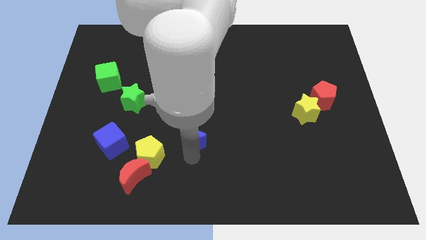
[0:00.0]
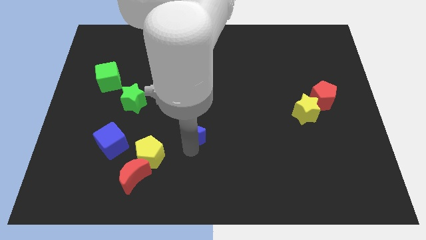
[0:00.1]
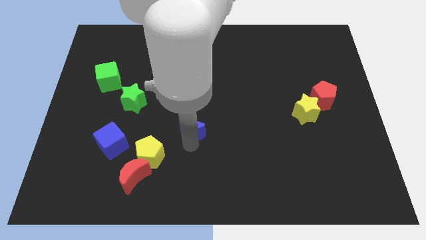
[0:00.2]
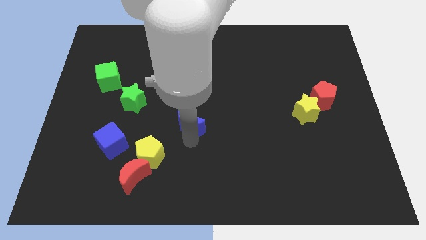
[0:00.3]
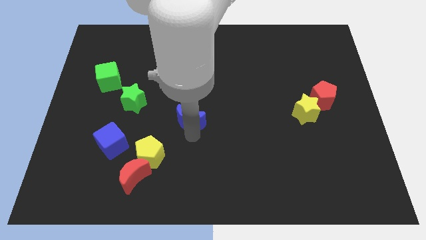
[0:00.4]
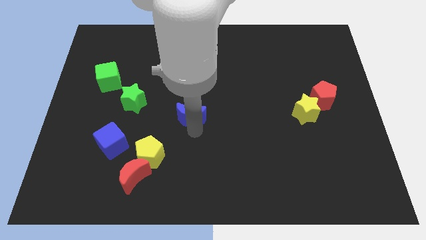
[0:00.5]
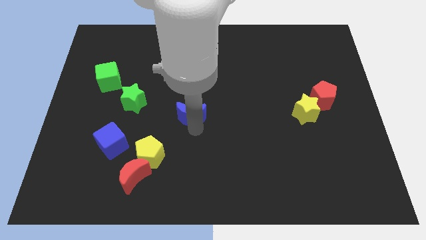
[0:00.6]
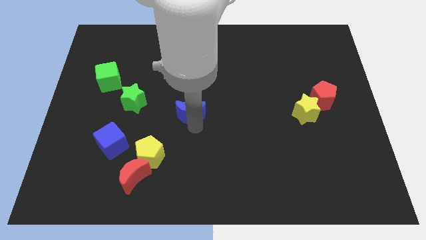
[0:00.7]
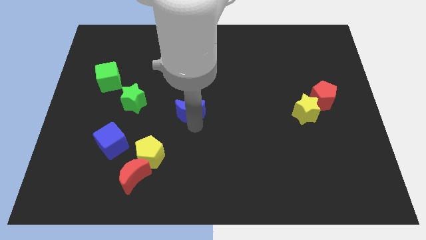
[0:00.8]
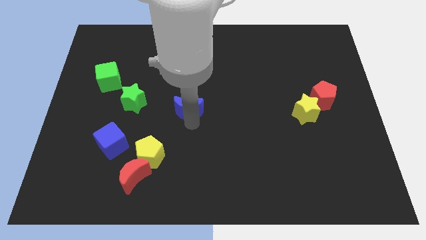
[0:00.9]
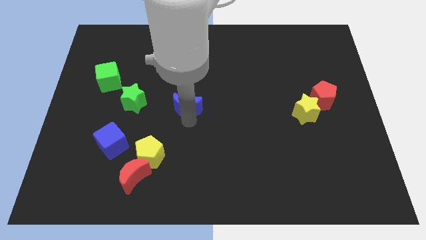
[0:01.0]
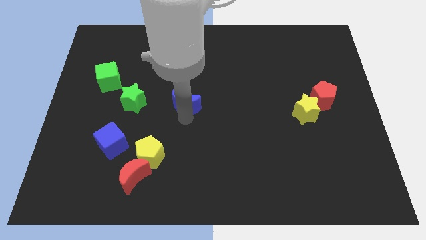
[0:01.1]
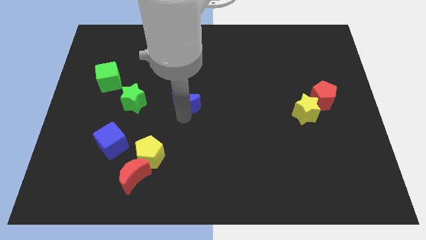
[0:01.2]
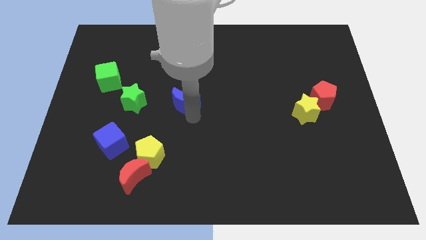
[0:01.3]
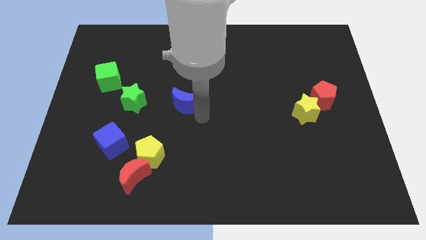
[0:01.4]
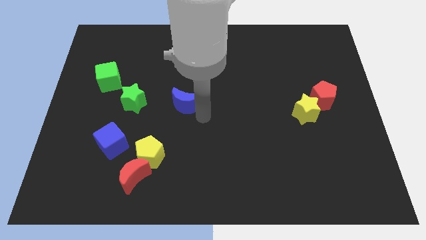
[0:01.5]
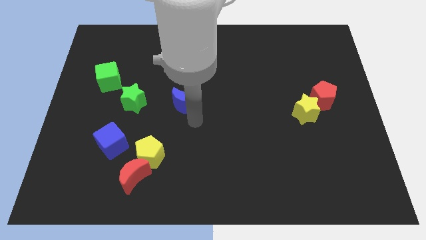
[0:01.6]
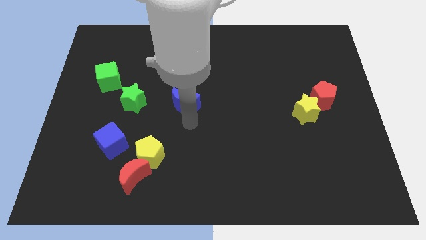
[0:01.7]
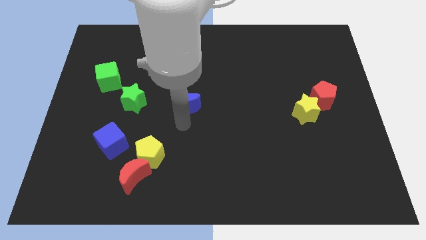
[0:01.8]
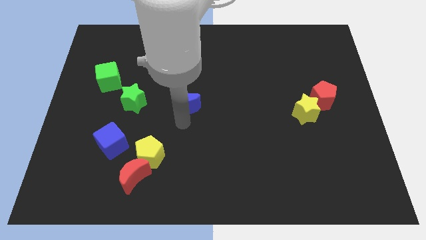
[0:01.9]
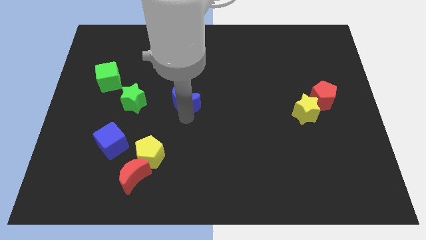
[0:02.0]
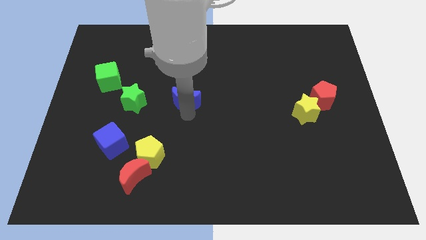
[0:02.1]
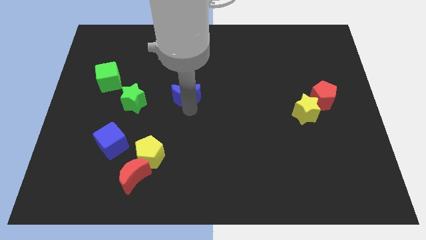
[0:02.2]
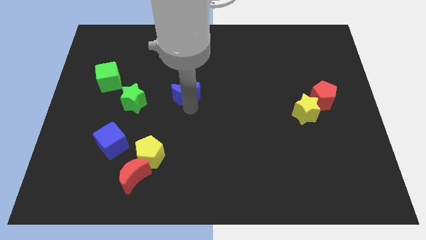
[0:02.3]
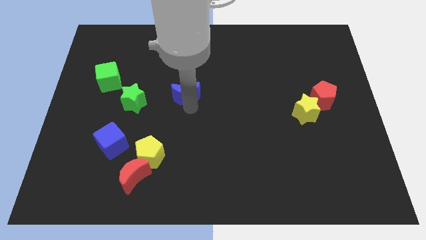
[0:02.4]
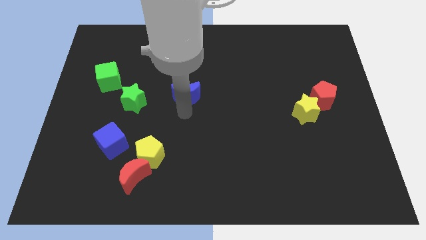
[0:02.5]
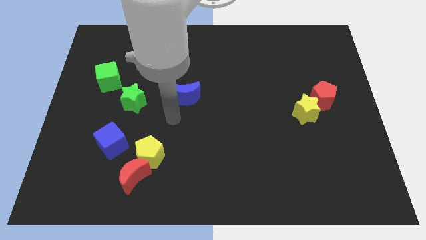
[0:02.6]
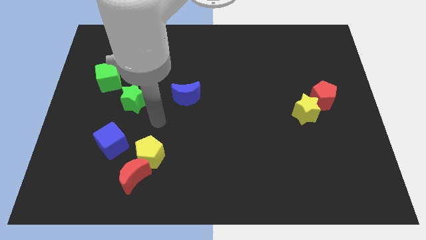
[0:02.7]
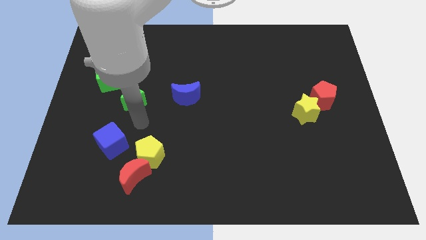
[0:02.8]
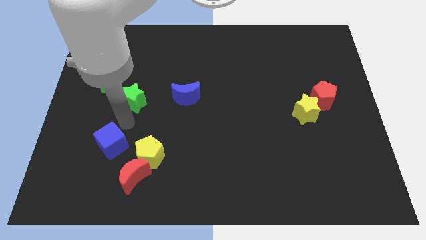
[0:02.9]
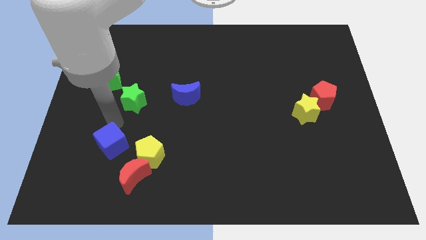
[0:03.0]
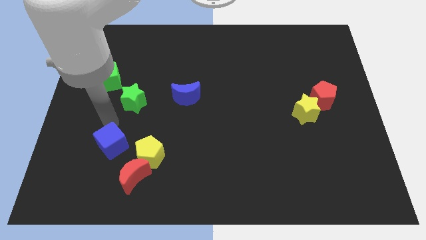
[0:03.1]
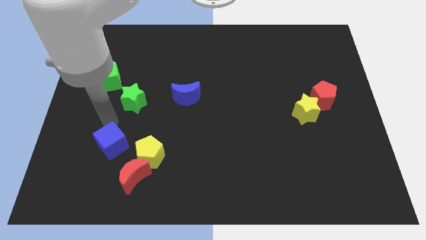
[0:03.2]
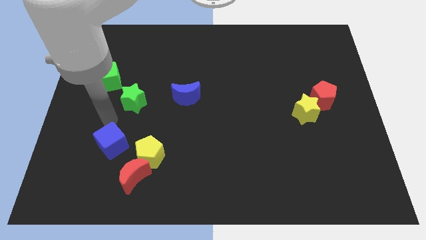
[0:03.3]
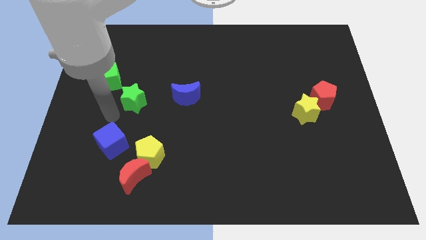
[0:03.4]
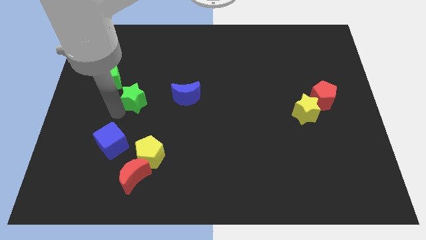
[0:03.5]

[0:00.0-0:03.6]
place the blue moon to the right of the green star

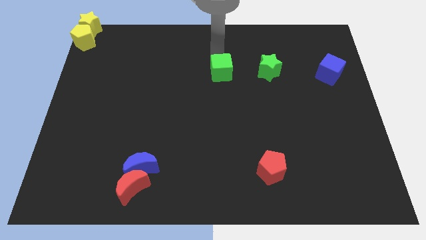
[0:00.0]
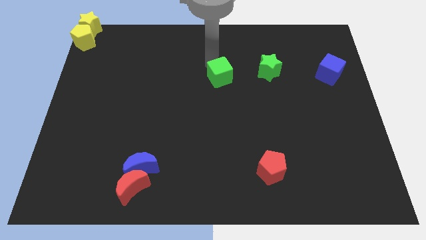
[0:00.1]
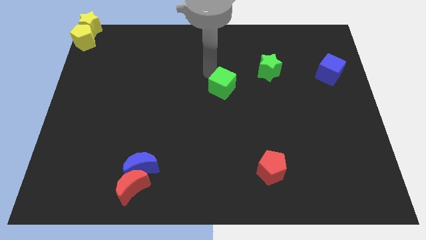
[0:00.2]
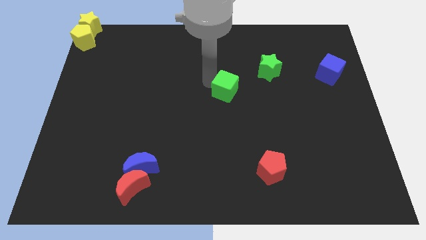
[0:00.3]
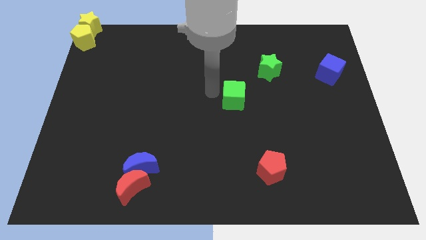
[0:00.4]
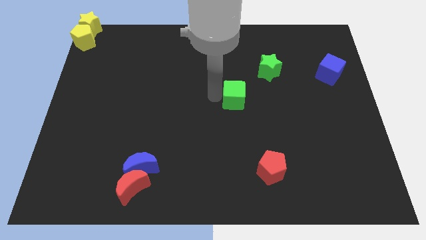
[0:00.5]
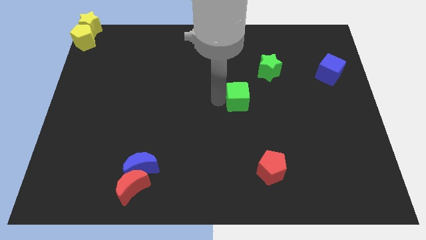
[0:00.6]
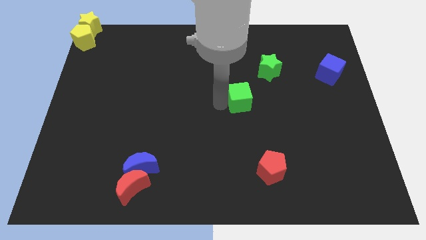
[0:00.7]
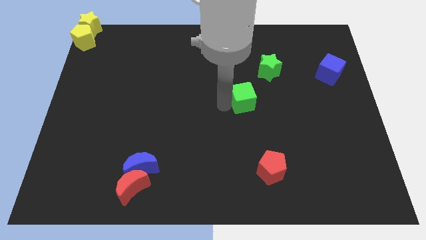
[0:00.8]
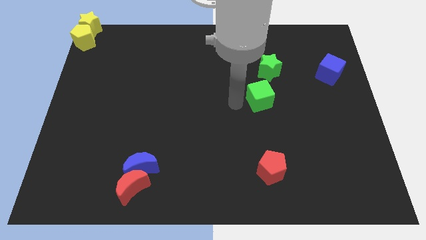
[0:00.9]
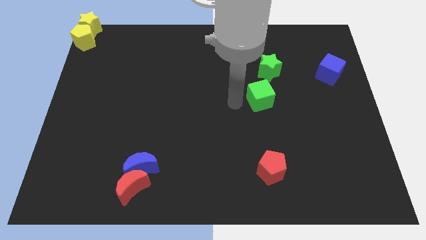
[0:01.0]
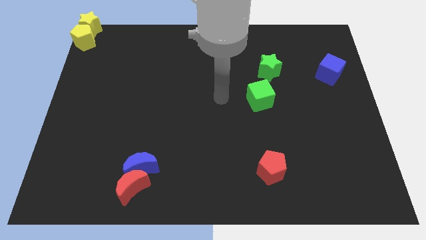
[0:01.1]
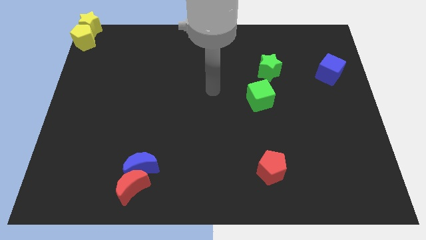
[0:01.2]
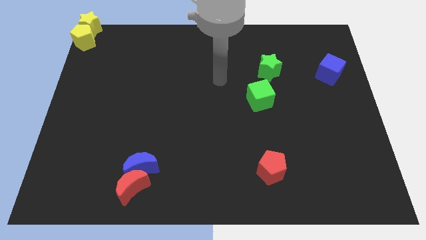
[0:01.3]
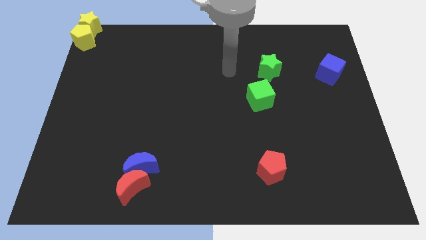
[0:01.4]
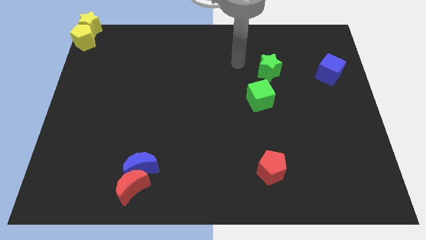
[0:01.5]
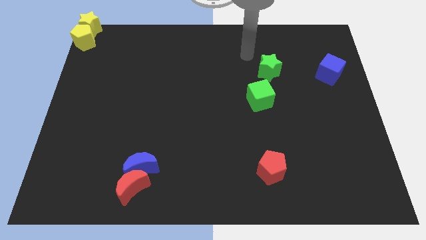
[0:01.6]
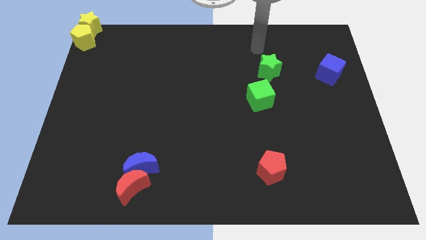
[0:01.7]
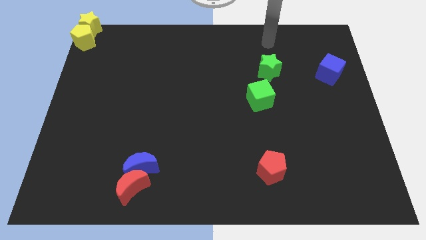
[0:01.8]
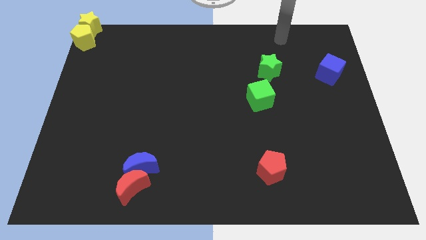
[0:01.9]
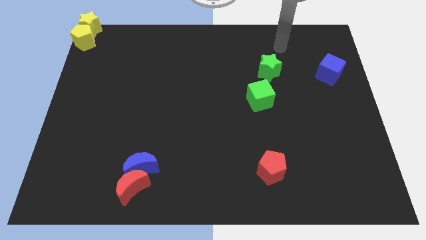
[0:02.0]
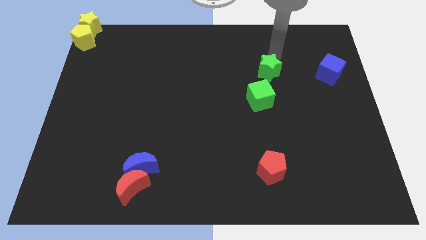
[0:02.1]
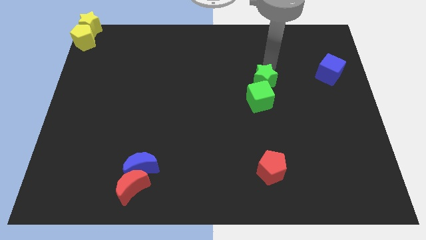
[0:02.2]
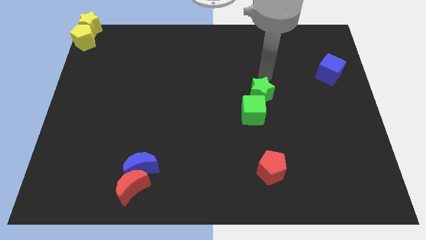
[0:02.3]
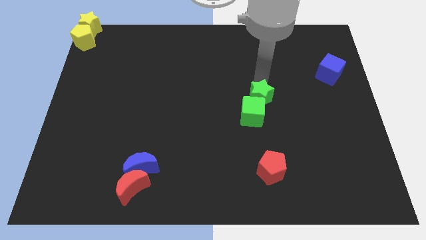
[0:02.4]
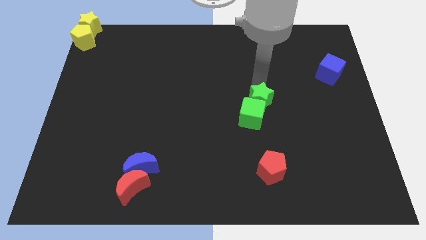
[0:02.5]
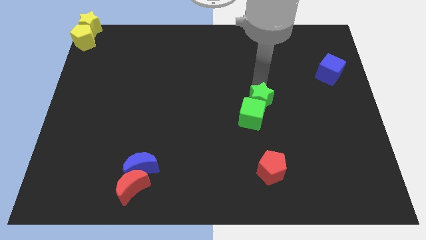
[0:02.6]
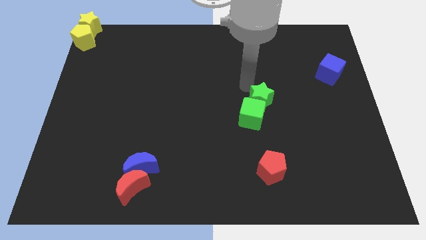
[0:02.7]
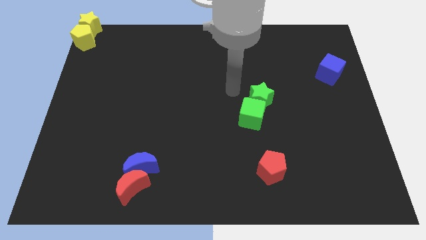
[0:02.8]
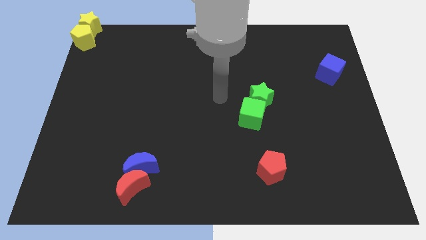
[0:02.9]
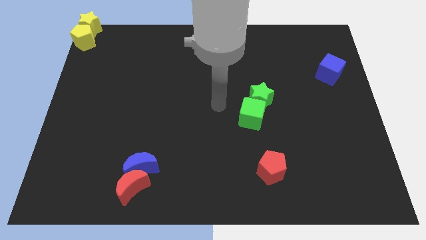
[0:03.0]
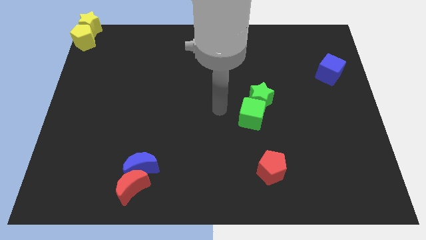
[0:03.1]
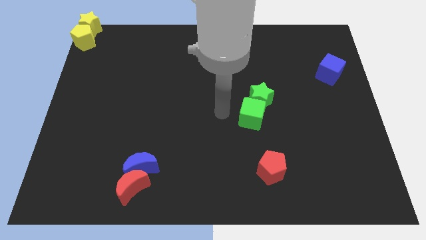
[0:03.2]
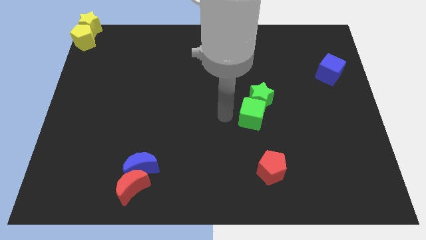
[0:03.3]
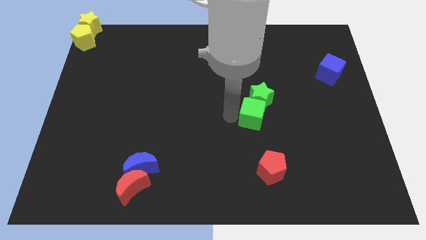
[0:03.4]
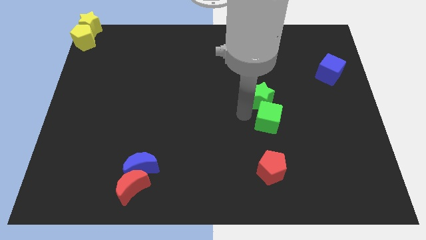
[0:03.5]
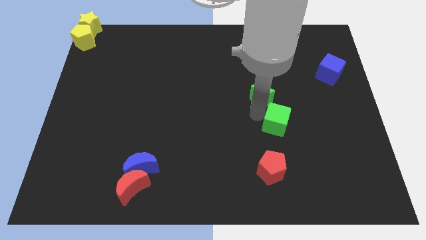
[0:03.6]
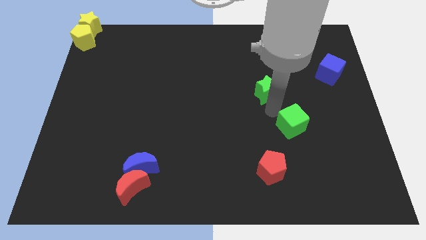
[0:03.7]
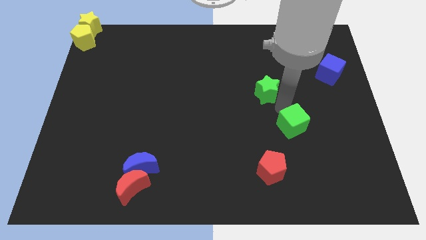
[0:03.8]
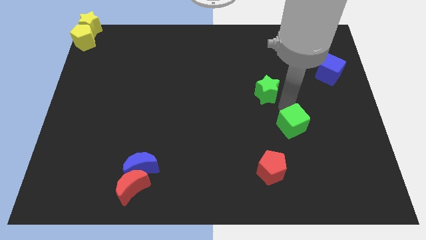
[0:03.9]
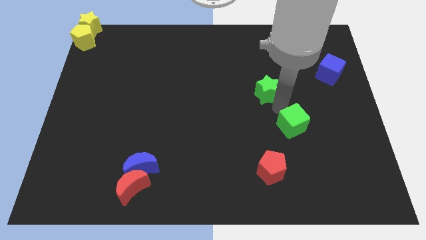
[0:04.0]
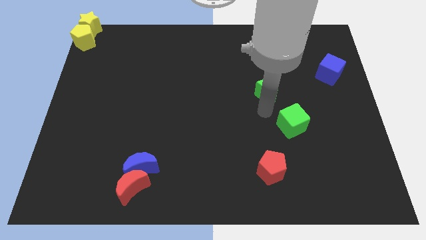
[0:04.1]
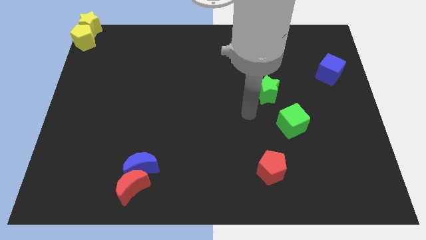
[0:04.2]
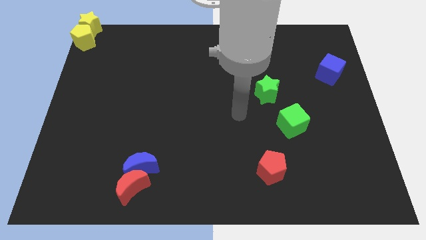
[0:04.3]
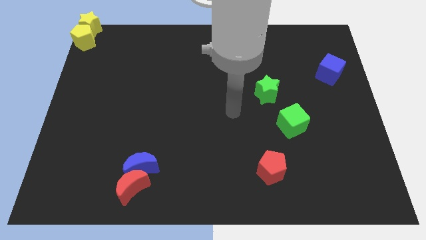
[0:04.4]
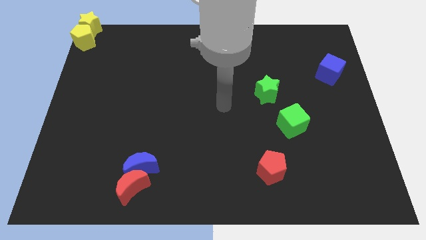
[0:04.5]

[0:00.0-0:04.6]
place the green cube in between the blue cube and red pentagon

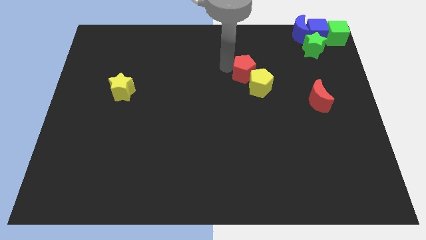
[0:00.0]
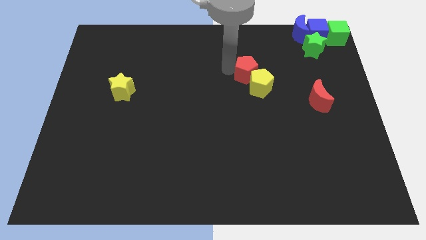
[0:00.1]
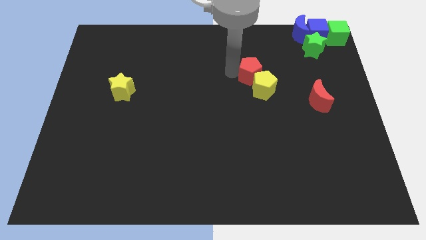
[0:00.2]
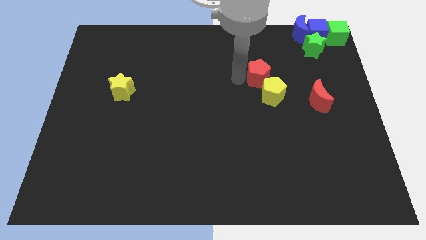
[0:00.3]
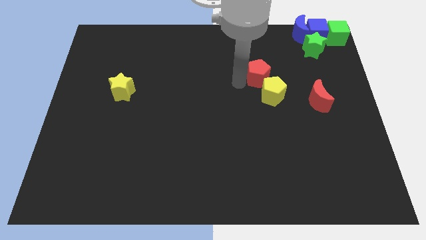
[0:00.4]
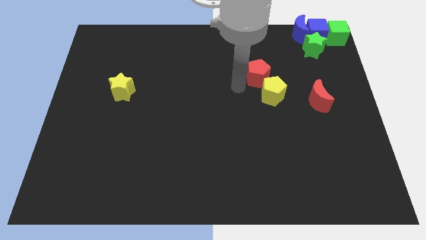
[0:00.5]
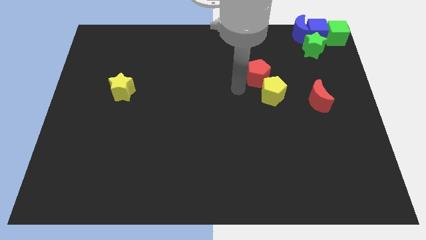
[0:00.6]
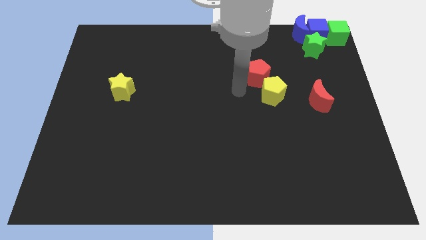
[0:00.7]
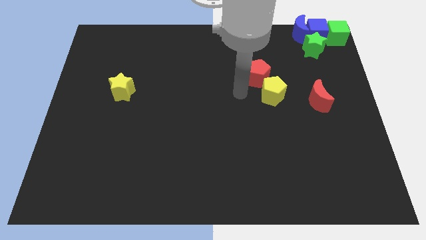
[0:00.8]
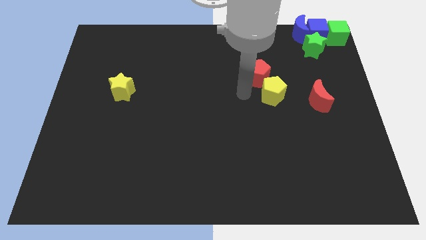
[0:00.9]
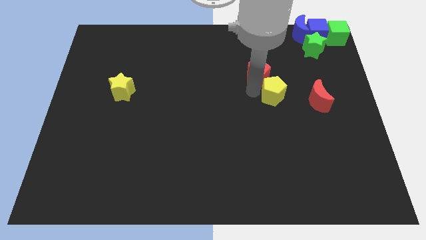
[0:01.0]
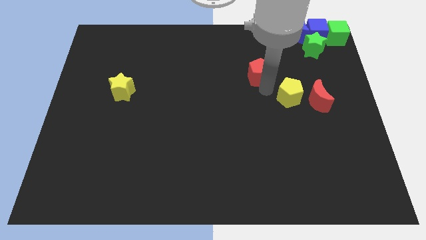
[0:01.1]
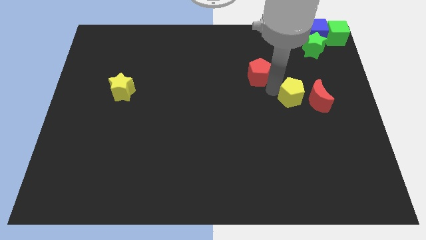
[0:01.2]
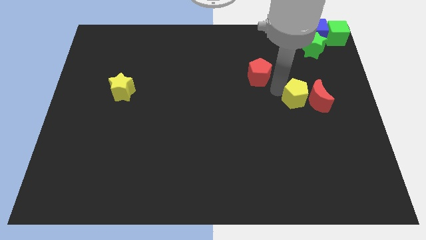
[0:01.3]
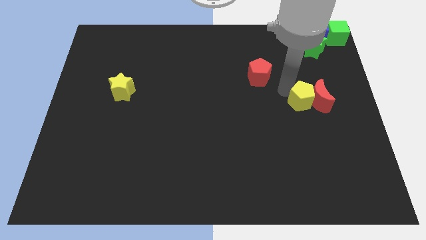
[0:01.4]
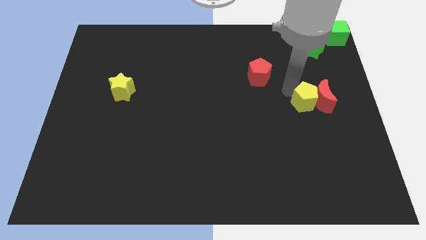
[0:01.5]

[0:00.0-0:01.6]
move the yellow pentagon into the left side of the red moon
